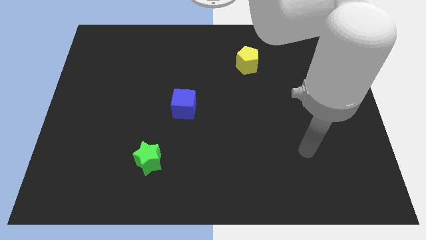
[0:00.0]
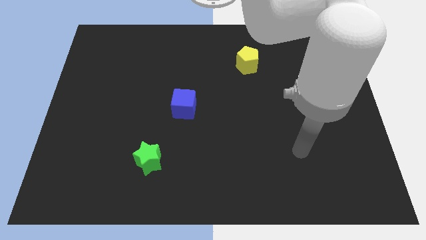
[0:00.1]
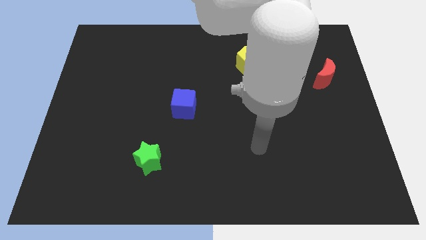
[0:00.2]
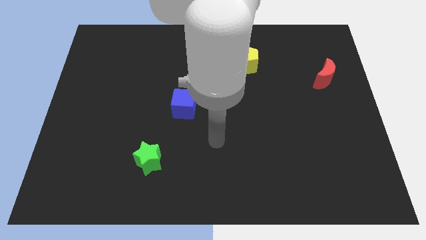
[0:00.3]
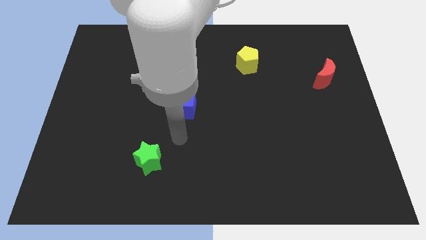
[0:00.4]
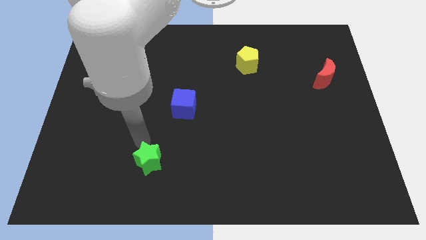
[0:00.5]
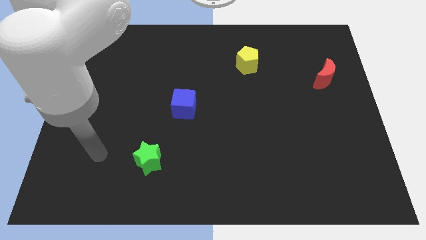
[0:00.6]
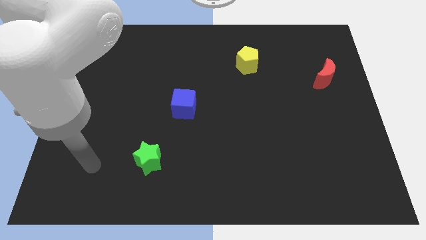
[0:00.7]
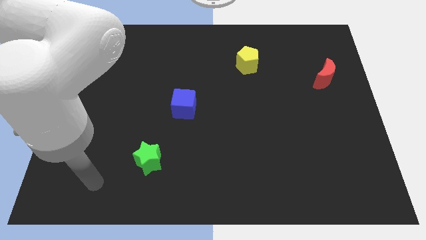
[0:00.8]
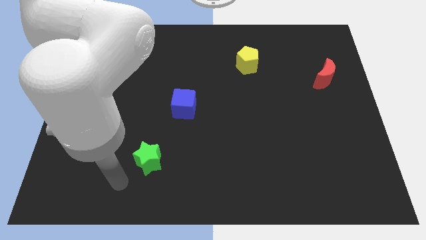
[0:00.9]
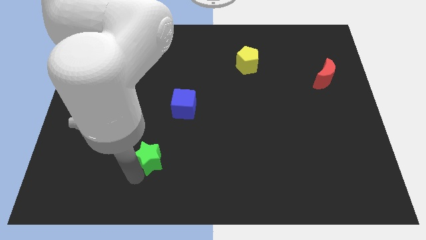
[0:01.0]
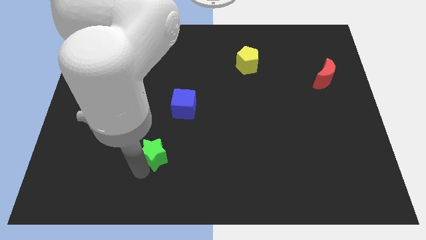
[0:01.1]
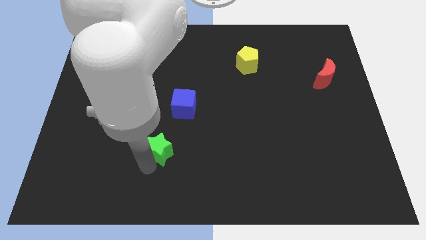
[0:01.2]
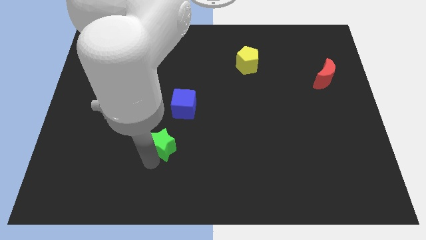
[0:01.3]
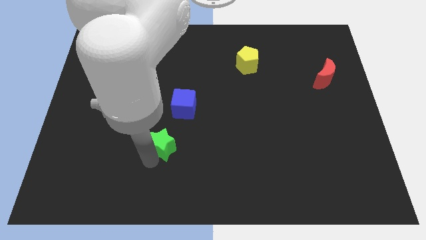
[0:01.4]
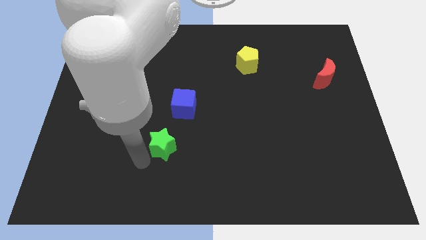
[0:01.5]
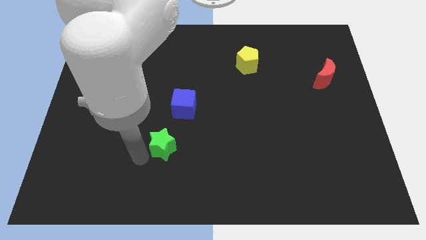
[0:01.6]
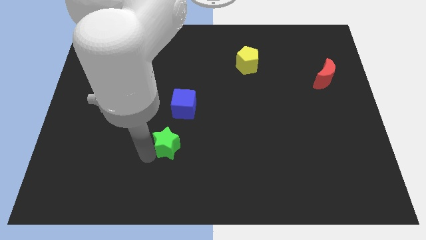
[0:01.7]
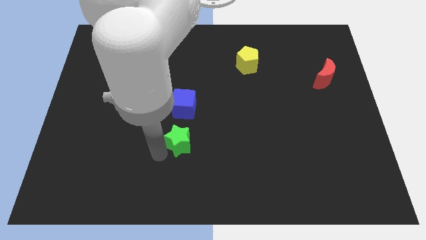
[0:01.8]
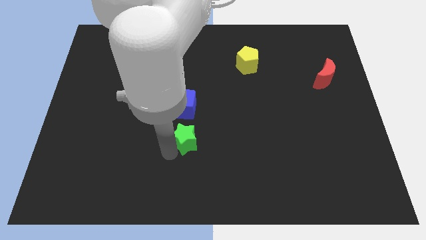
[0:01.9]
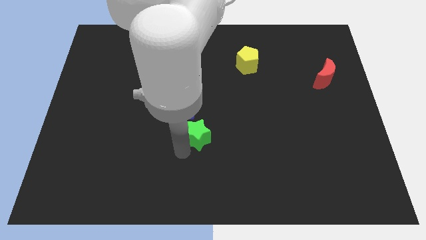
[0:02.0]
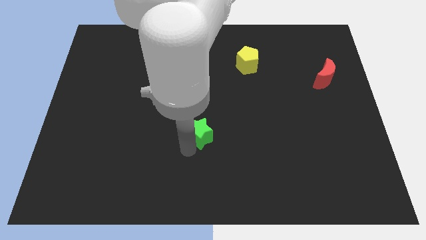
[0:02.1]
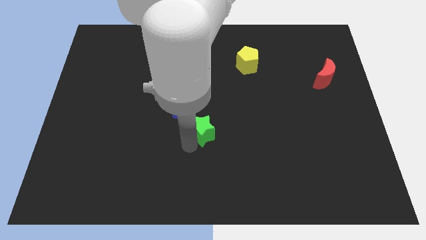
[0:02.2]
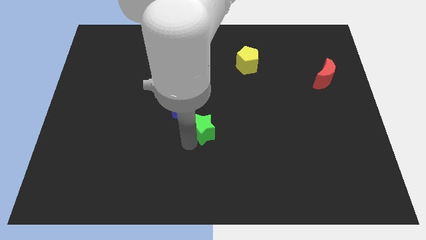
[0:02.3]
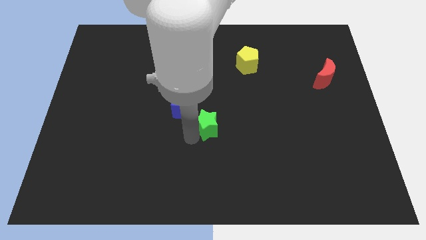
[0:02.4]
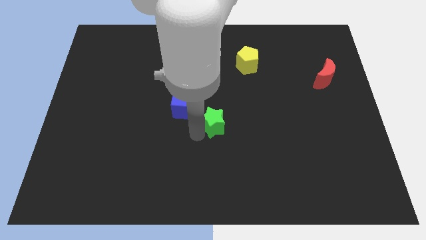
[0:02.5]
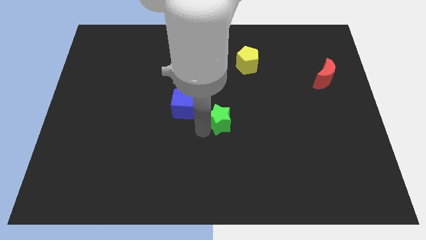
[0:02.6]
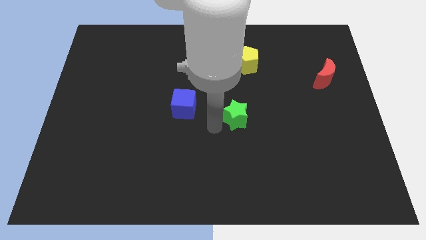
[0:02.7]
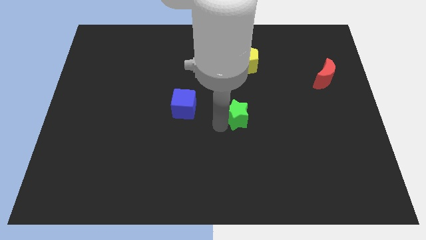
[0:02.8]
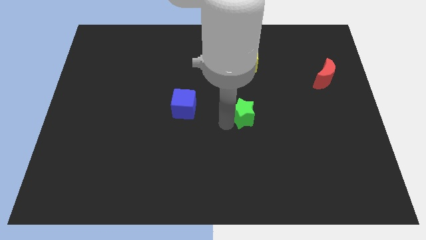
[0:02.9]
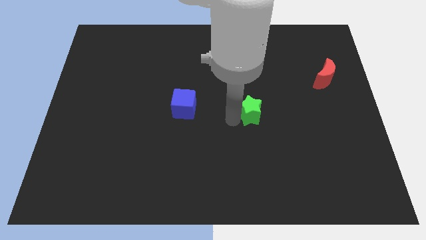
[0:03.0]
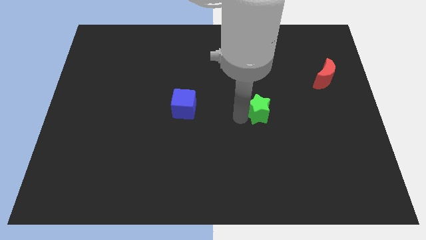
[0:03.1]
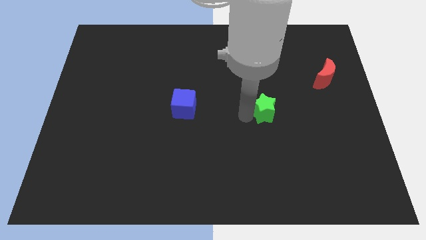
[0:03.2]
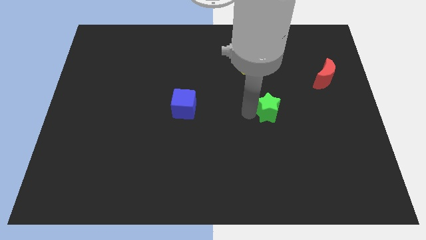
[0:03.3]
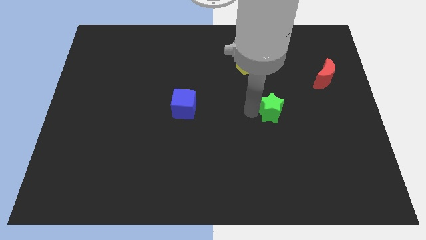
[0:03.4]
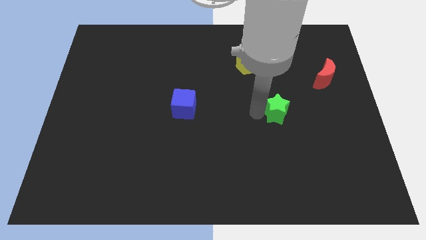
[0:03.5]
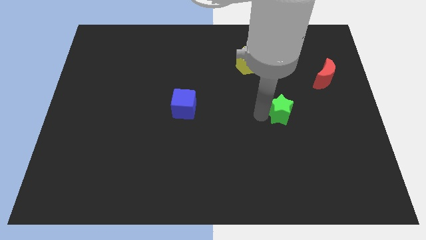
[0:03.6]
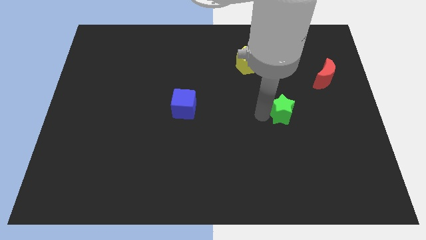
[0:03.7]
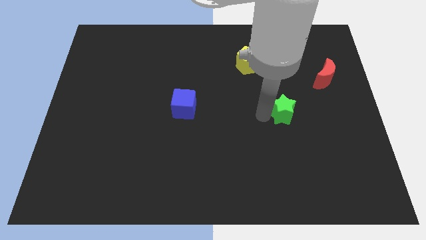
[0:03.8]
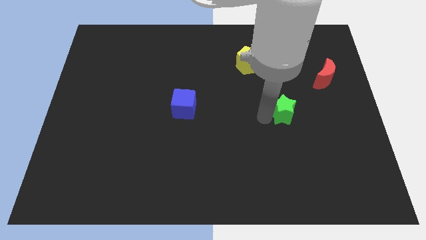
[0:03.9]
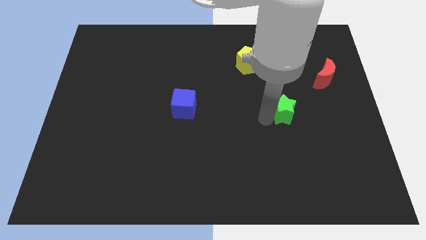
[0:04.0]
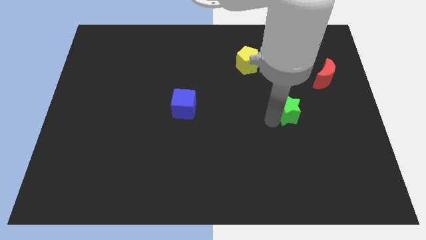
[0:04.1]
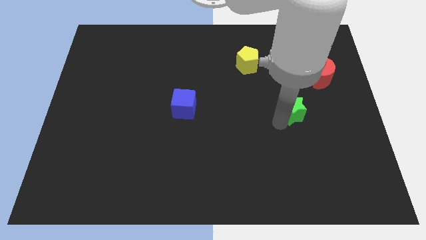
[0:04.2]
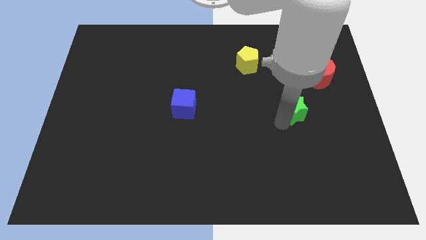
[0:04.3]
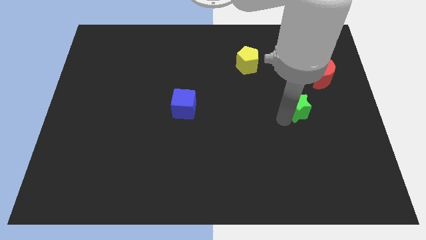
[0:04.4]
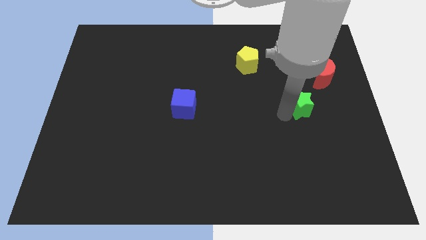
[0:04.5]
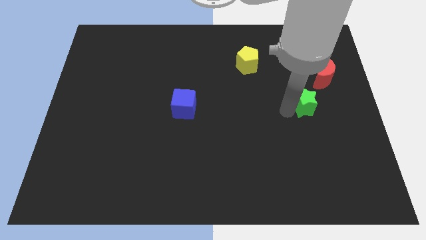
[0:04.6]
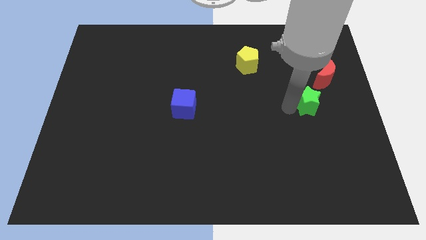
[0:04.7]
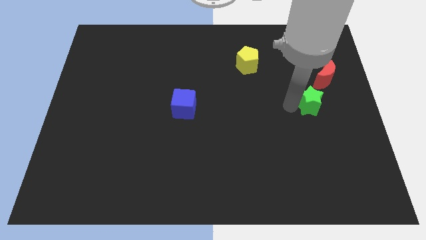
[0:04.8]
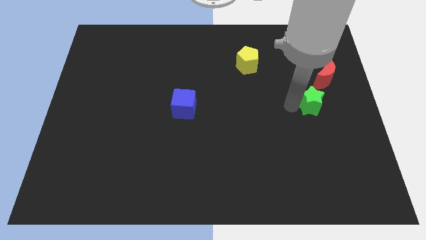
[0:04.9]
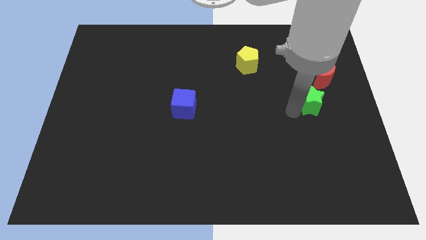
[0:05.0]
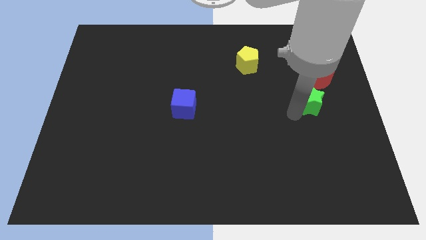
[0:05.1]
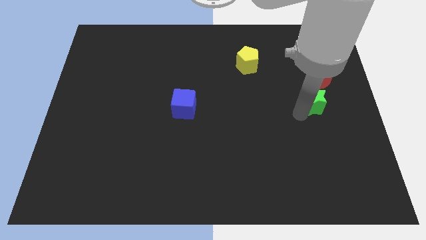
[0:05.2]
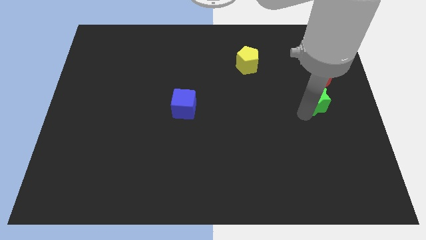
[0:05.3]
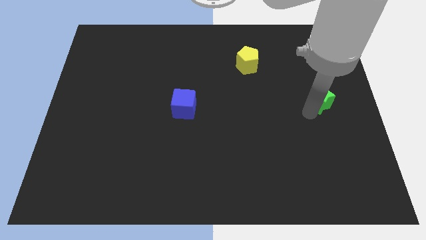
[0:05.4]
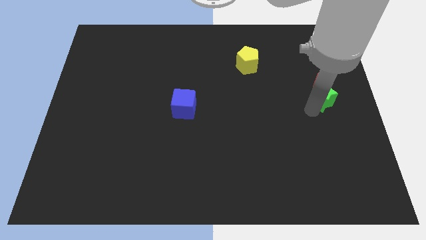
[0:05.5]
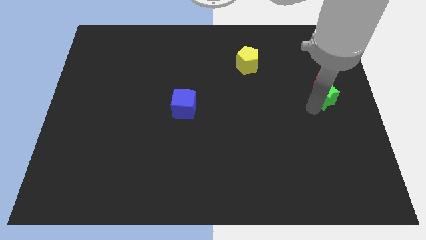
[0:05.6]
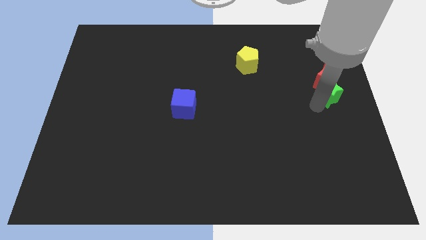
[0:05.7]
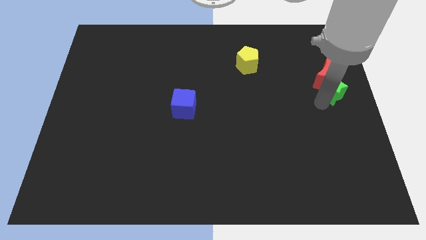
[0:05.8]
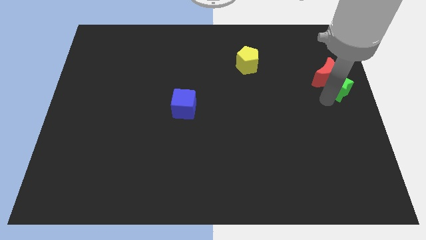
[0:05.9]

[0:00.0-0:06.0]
slide the green block next to the moon

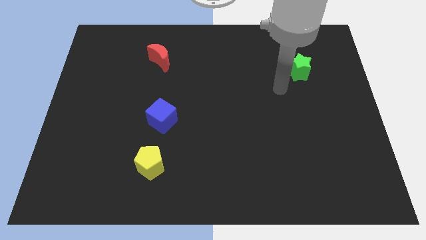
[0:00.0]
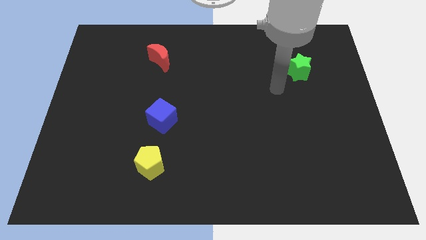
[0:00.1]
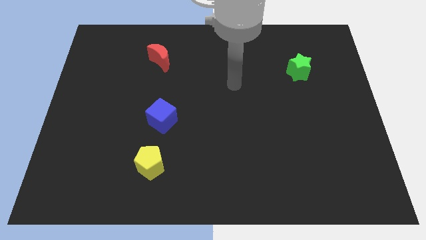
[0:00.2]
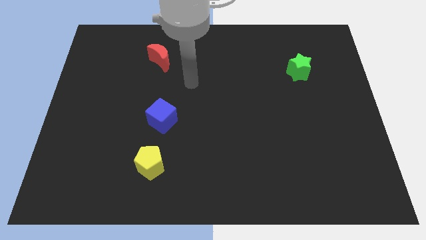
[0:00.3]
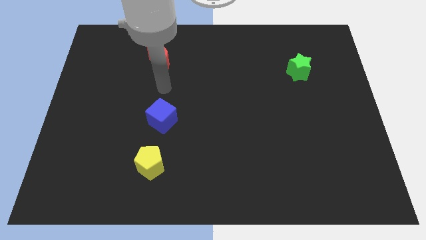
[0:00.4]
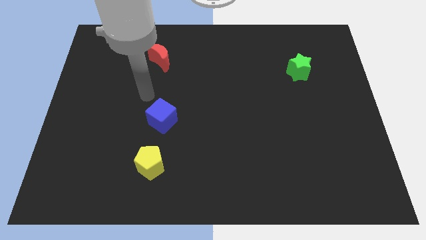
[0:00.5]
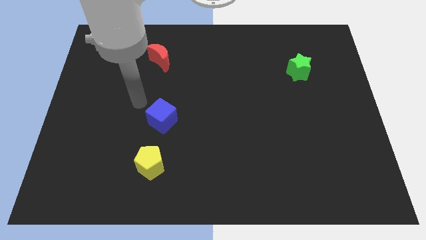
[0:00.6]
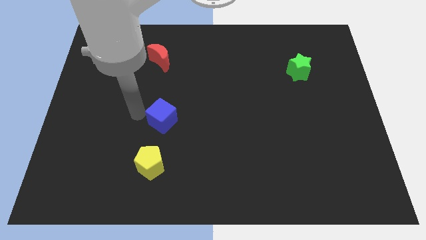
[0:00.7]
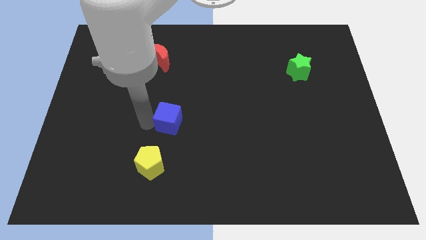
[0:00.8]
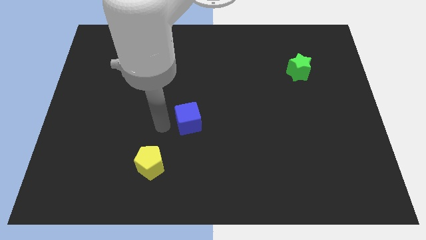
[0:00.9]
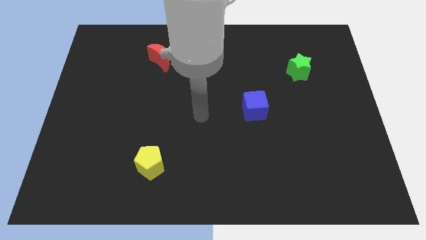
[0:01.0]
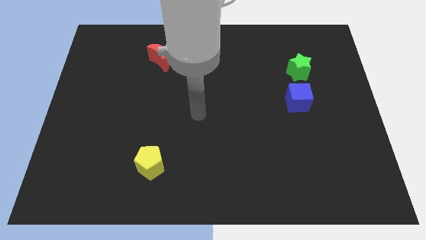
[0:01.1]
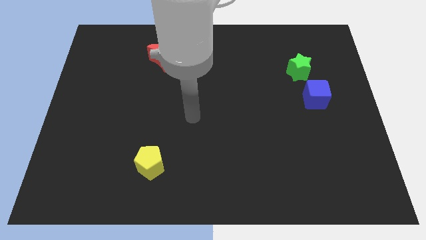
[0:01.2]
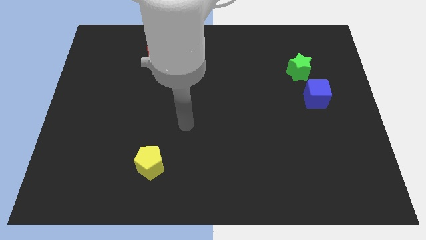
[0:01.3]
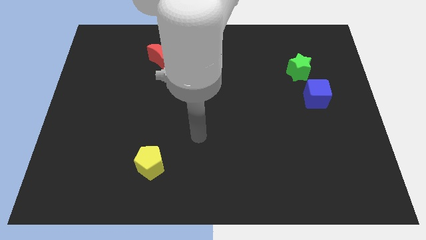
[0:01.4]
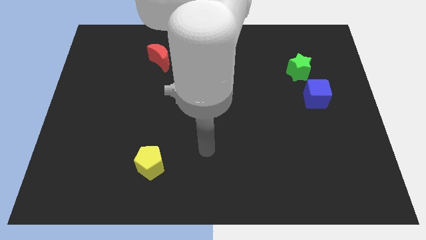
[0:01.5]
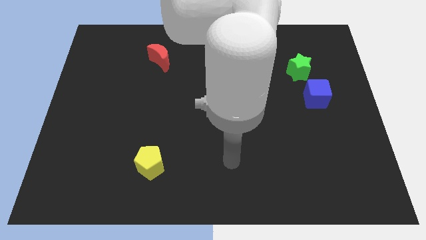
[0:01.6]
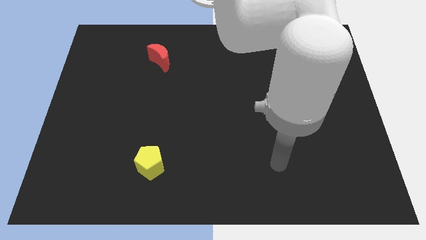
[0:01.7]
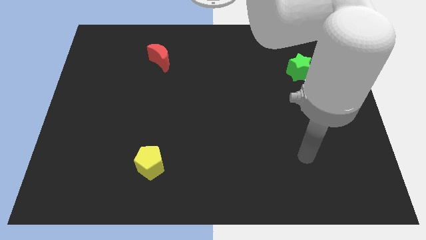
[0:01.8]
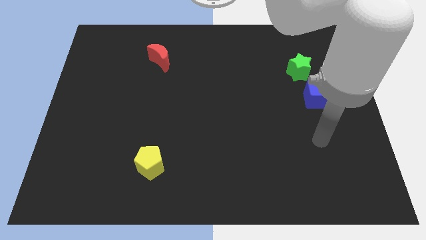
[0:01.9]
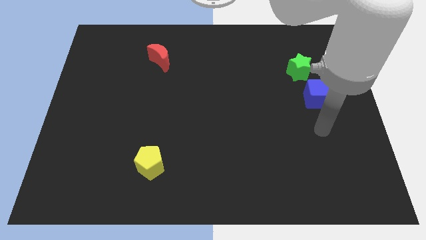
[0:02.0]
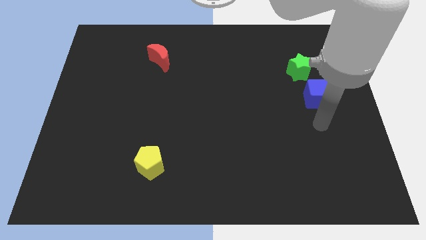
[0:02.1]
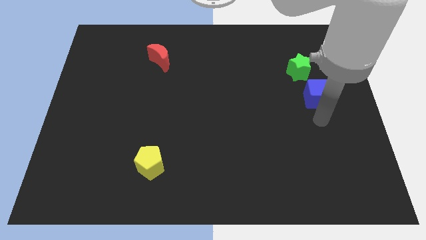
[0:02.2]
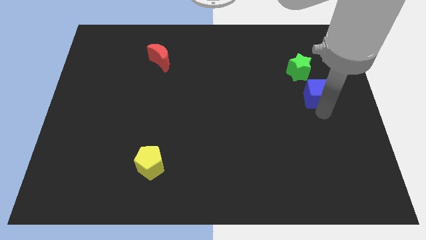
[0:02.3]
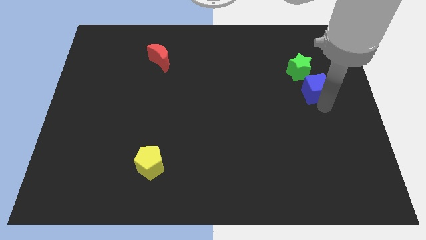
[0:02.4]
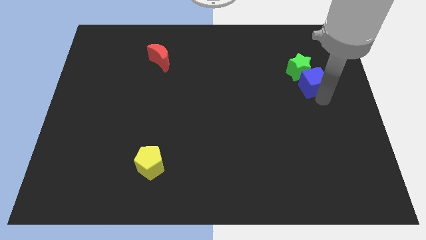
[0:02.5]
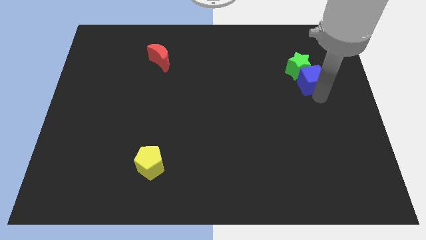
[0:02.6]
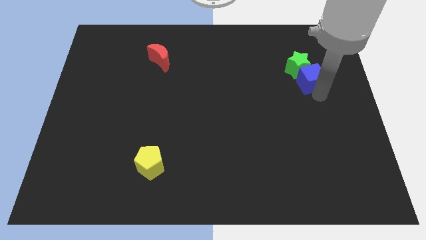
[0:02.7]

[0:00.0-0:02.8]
push the cube to the green block
